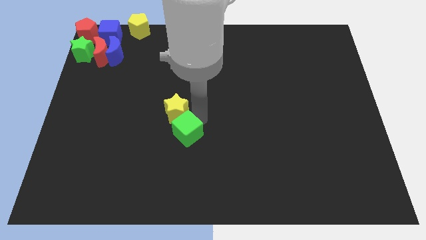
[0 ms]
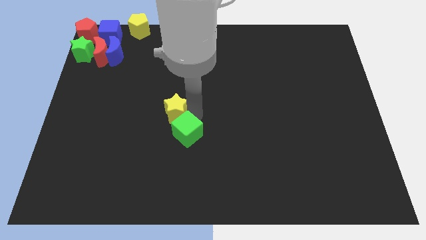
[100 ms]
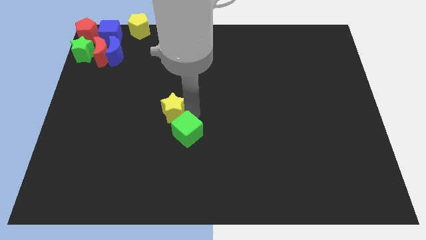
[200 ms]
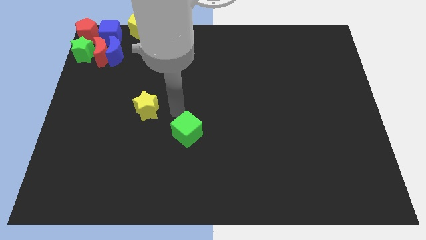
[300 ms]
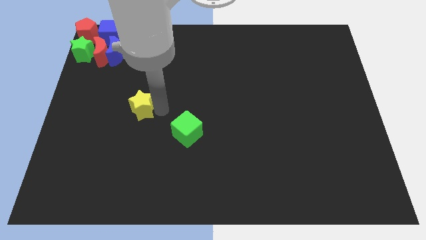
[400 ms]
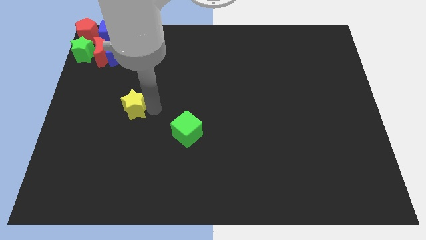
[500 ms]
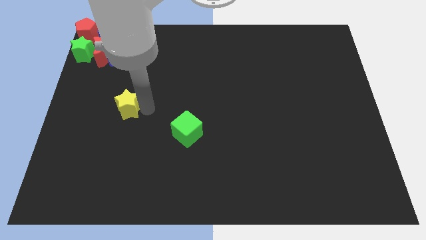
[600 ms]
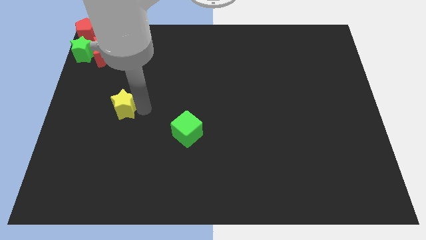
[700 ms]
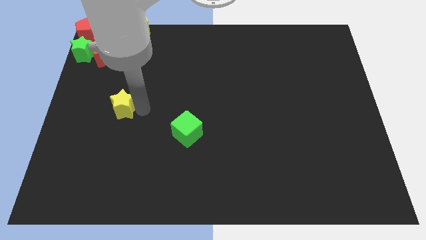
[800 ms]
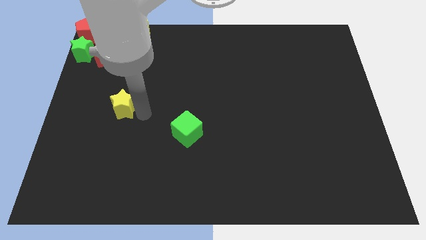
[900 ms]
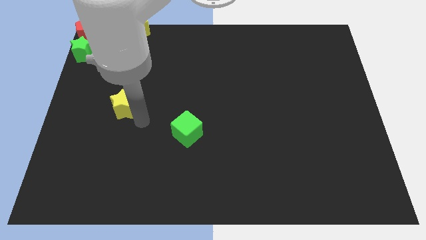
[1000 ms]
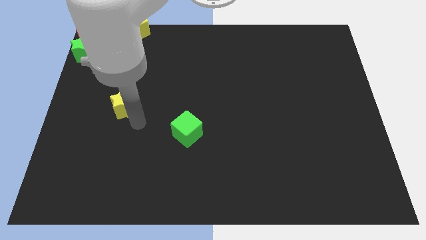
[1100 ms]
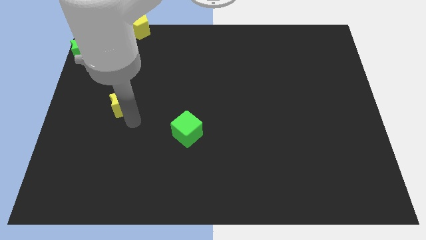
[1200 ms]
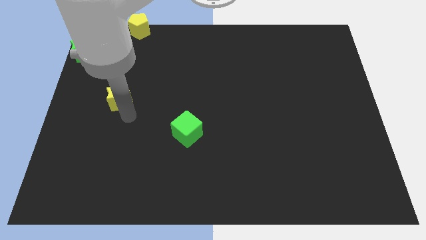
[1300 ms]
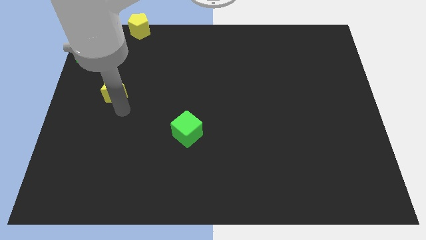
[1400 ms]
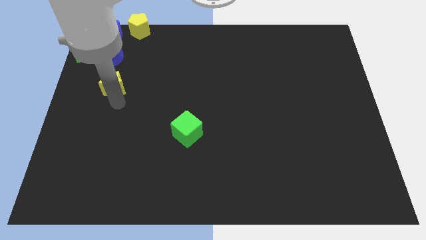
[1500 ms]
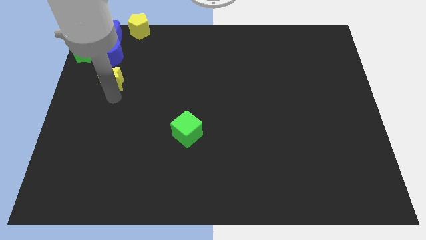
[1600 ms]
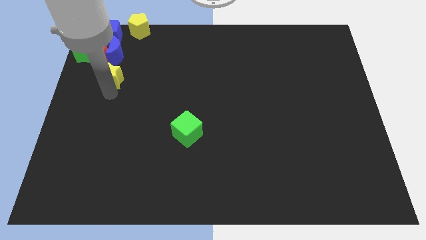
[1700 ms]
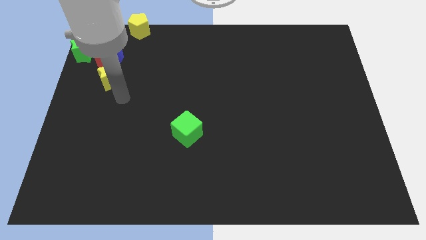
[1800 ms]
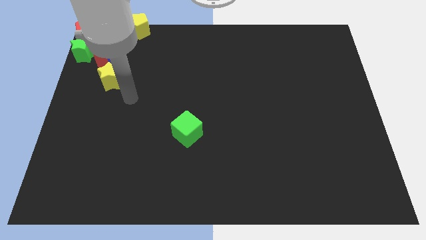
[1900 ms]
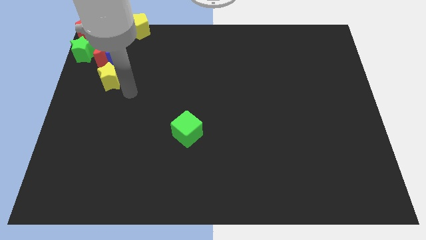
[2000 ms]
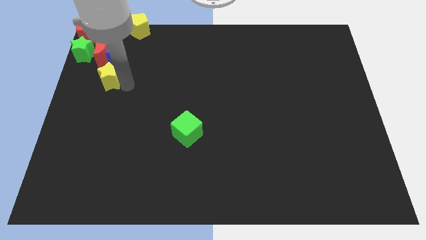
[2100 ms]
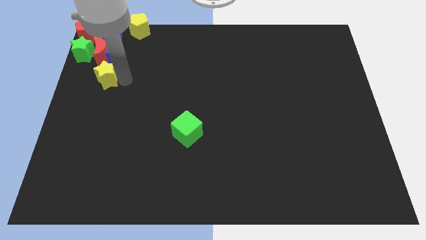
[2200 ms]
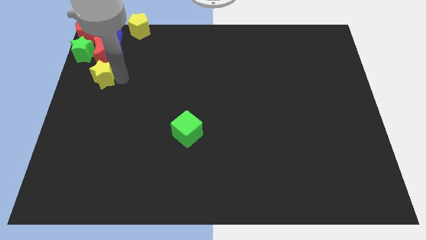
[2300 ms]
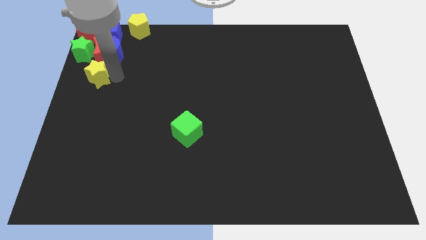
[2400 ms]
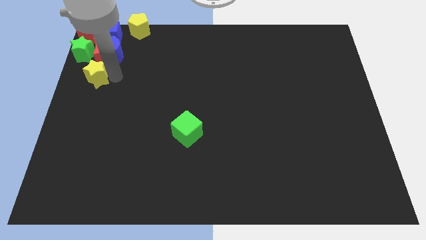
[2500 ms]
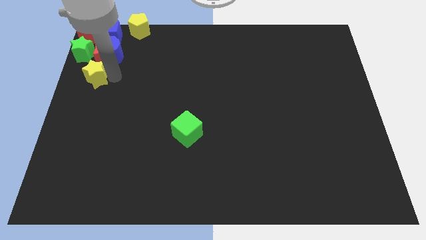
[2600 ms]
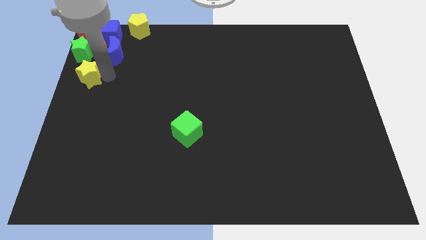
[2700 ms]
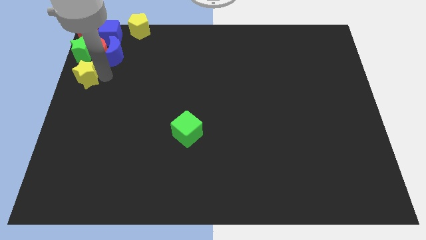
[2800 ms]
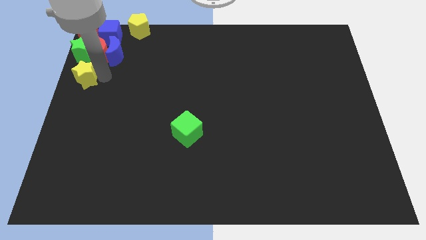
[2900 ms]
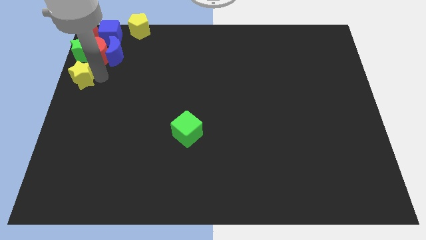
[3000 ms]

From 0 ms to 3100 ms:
place yellow star below green star

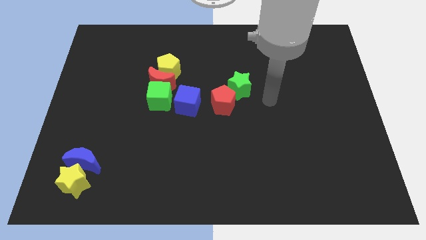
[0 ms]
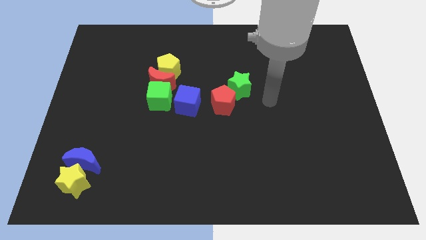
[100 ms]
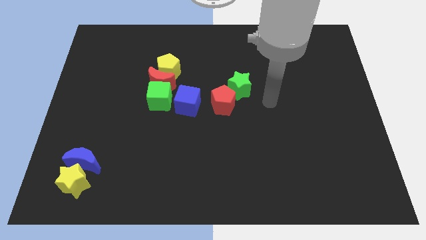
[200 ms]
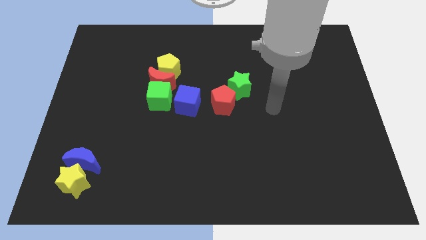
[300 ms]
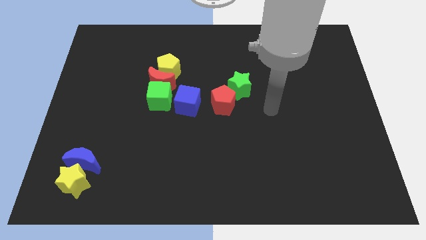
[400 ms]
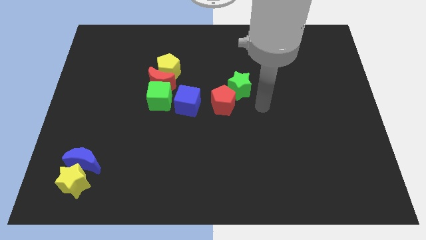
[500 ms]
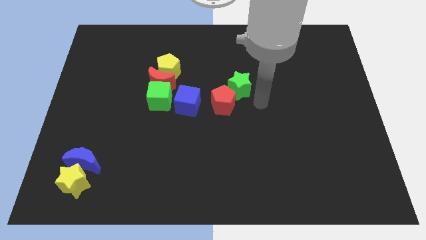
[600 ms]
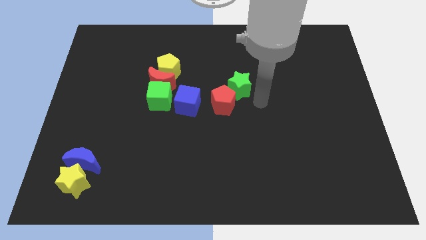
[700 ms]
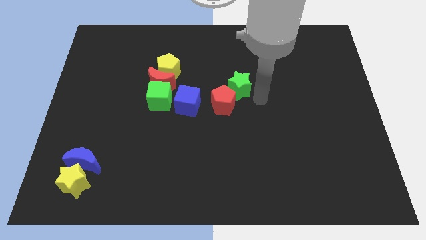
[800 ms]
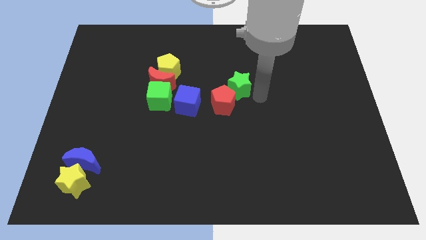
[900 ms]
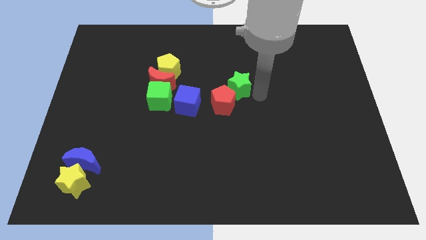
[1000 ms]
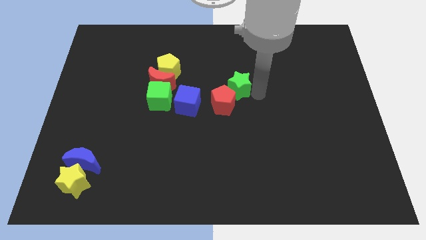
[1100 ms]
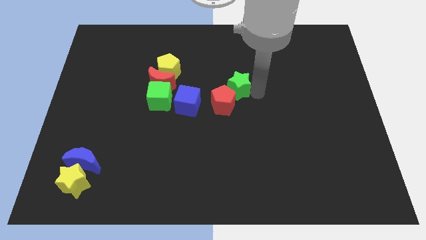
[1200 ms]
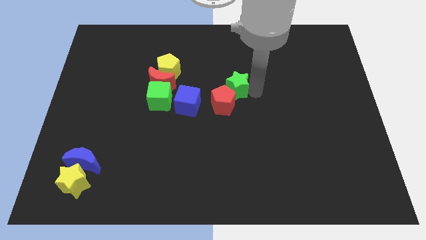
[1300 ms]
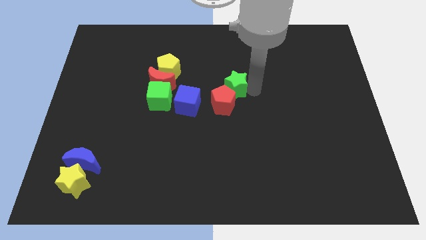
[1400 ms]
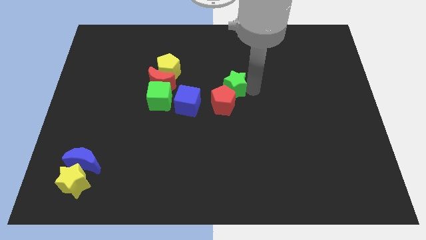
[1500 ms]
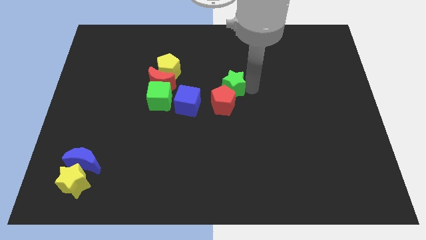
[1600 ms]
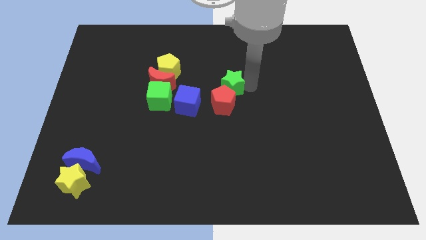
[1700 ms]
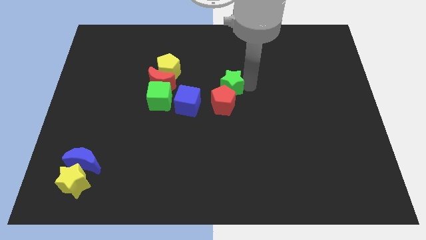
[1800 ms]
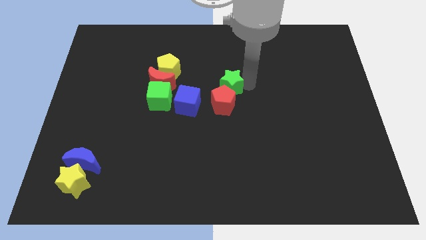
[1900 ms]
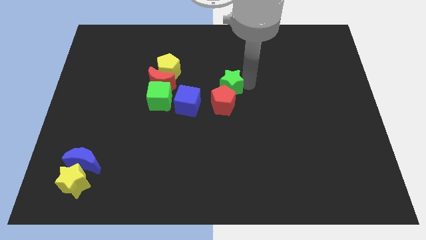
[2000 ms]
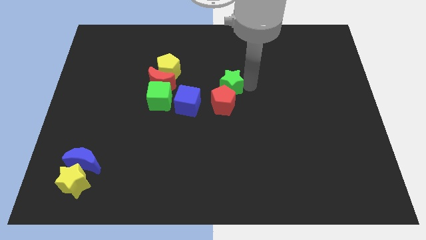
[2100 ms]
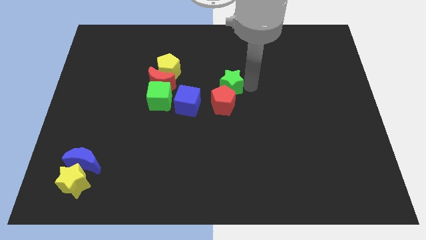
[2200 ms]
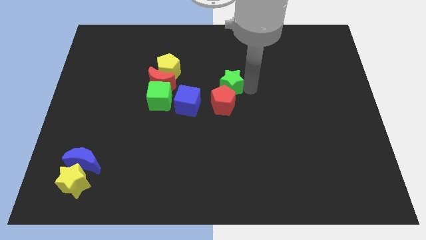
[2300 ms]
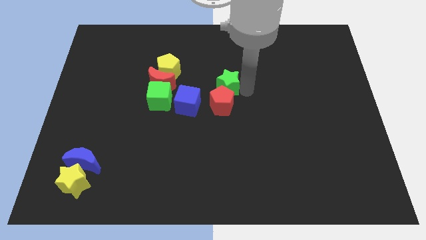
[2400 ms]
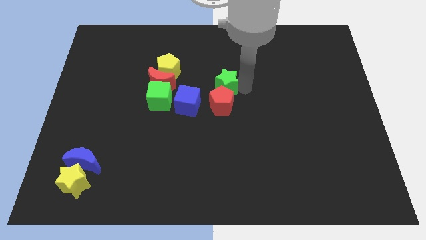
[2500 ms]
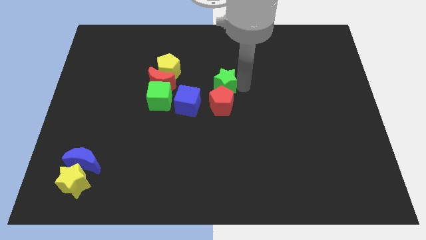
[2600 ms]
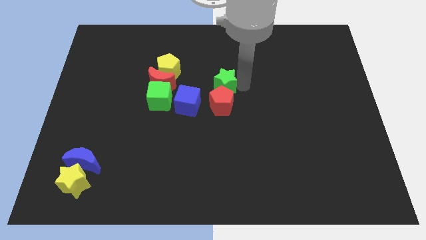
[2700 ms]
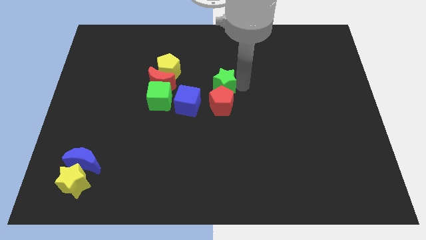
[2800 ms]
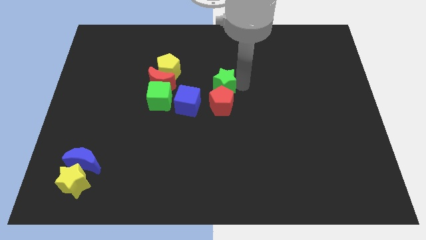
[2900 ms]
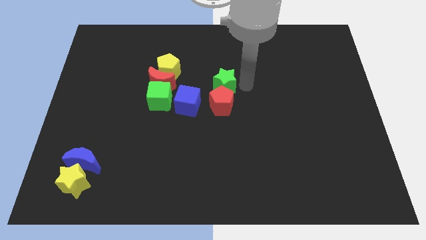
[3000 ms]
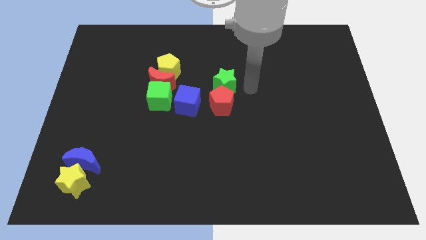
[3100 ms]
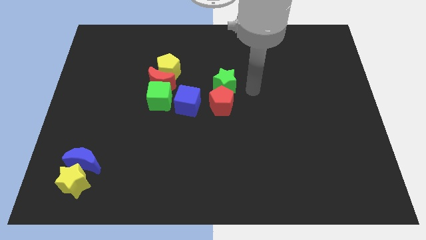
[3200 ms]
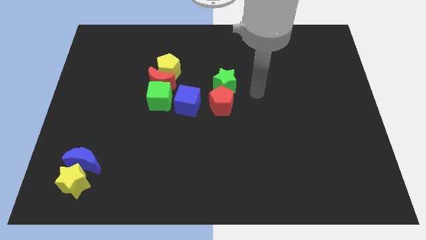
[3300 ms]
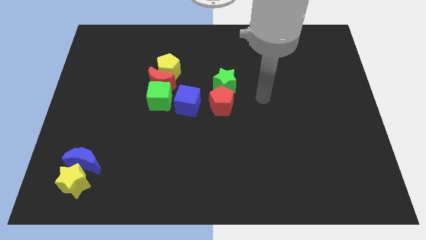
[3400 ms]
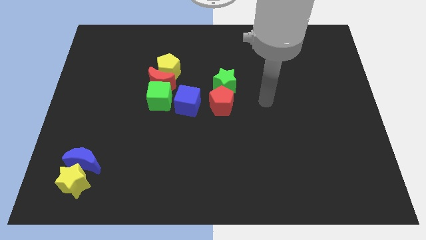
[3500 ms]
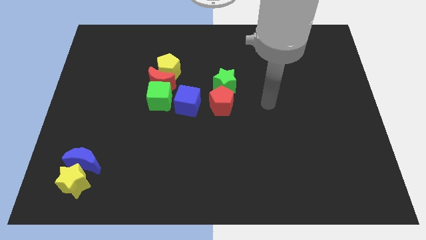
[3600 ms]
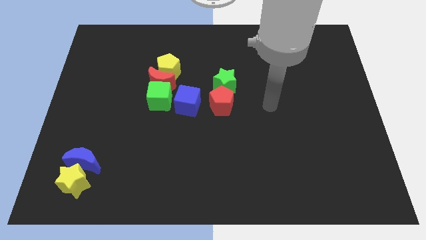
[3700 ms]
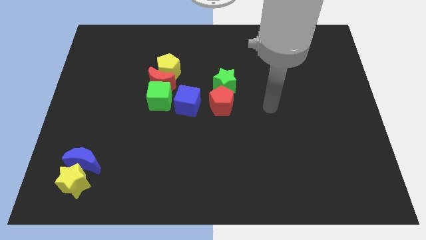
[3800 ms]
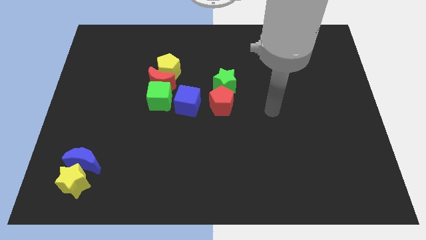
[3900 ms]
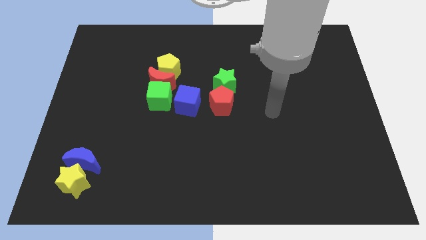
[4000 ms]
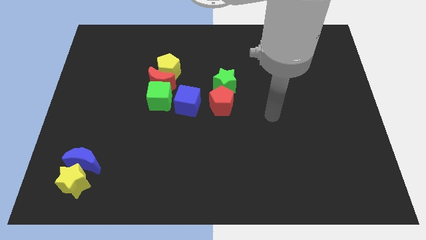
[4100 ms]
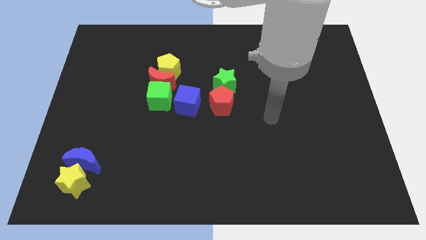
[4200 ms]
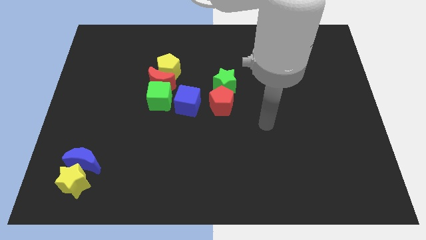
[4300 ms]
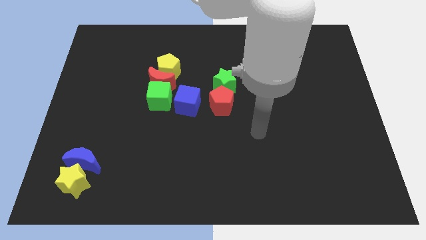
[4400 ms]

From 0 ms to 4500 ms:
put the green star above the red pentagon

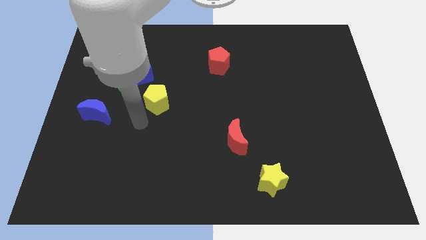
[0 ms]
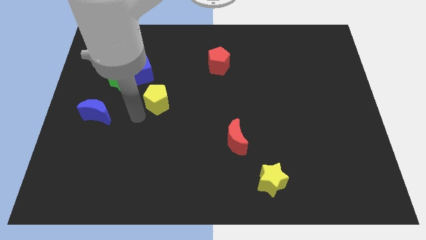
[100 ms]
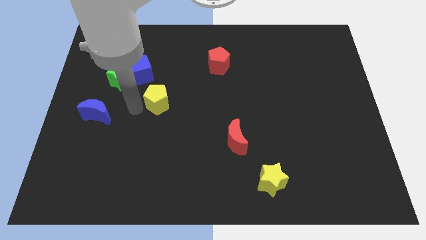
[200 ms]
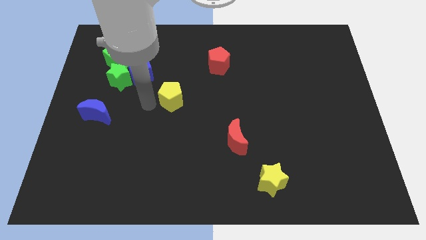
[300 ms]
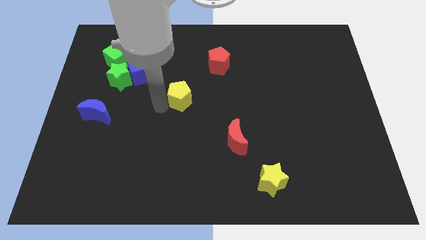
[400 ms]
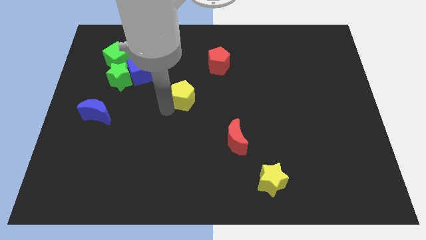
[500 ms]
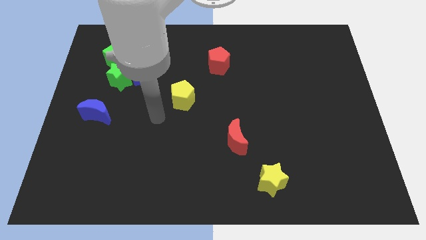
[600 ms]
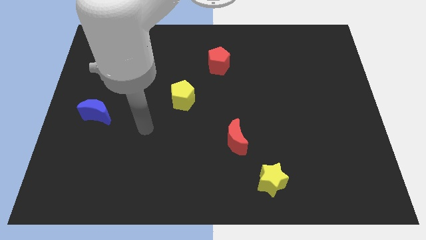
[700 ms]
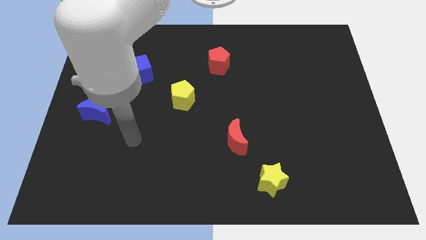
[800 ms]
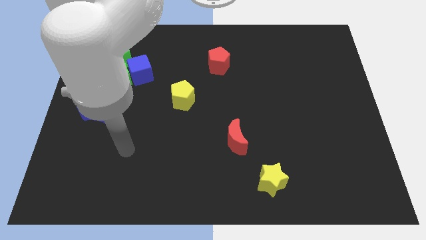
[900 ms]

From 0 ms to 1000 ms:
push yellow pentagon slightly towards right

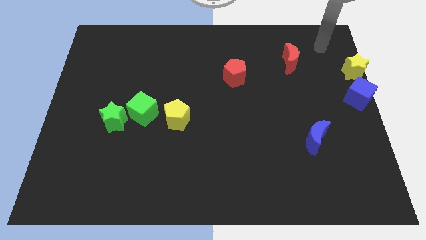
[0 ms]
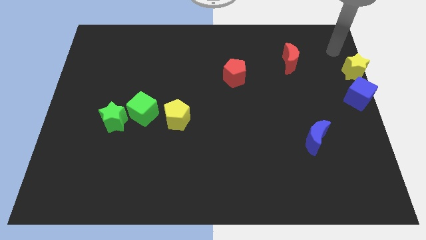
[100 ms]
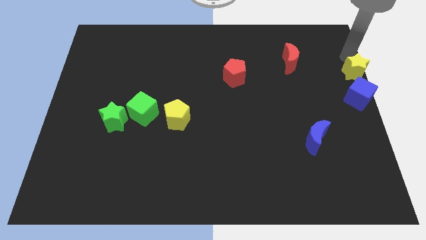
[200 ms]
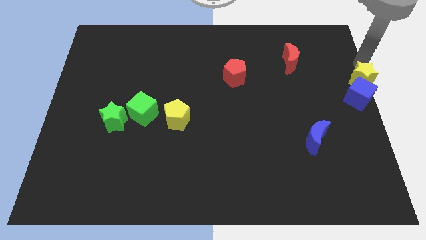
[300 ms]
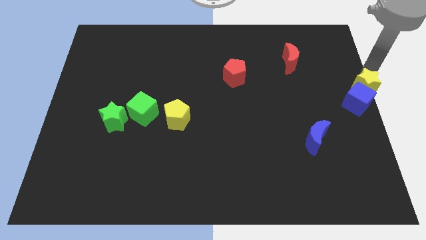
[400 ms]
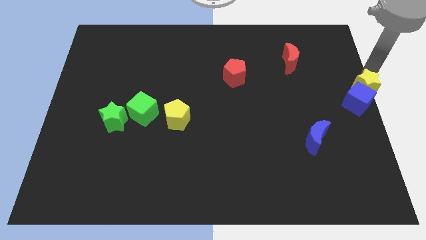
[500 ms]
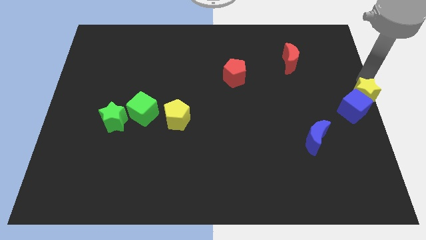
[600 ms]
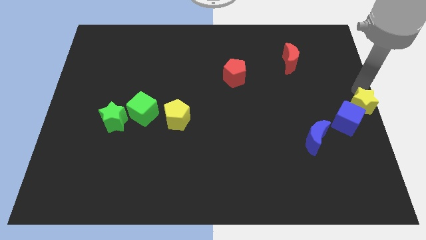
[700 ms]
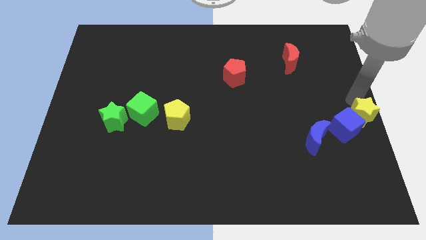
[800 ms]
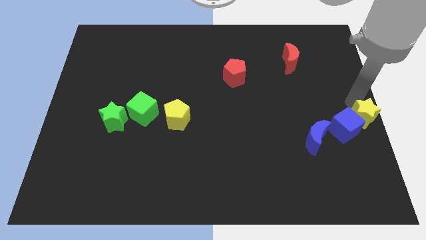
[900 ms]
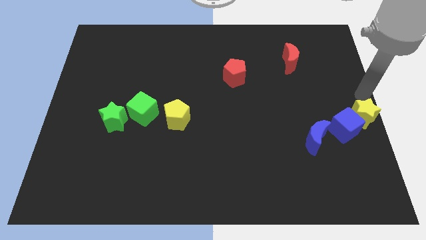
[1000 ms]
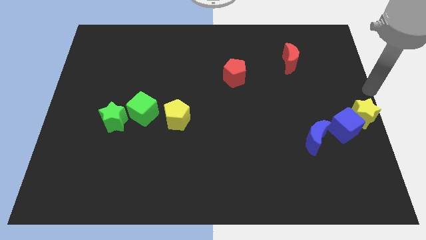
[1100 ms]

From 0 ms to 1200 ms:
push yellow star into blue cube
